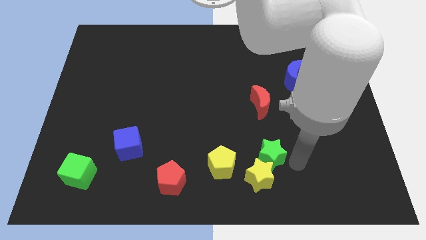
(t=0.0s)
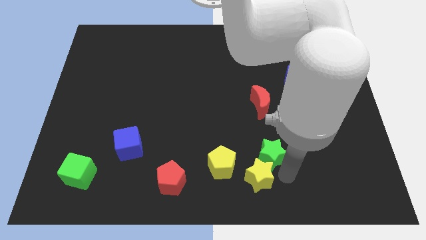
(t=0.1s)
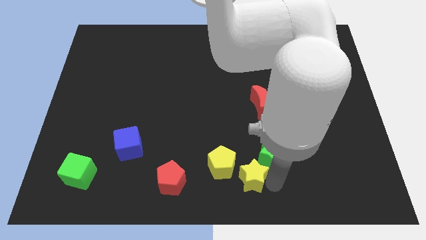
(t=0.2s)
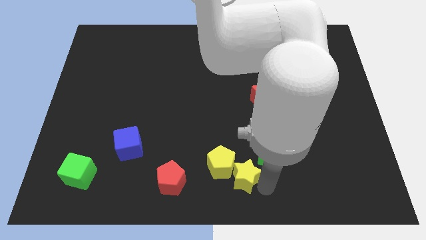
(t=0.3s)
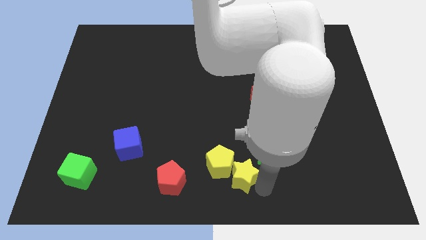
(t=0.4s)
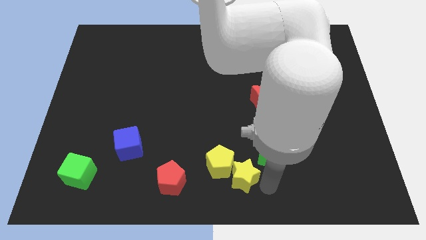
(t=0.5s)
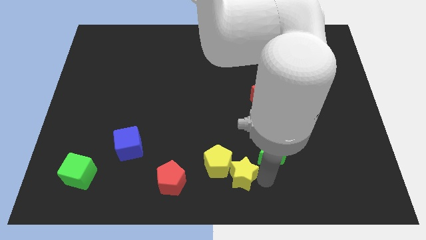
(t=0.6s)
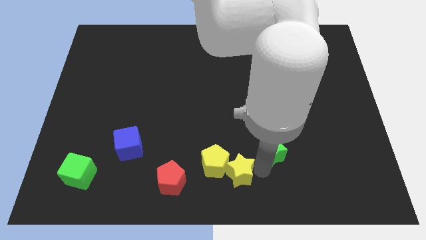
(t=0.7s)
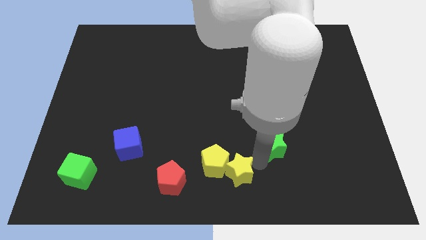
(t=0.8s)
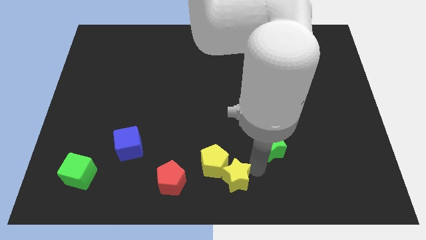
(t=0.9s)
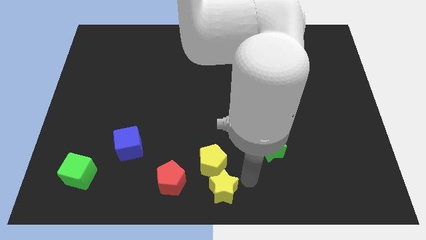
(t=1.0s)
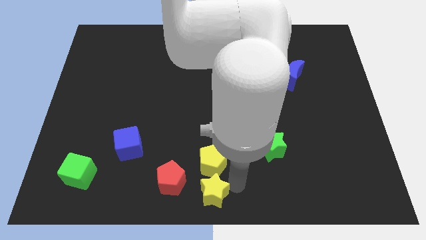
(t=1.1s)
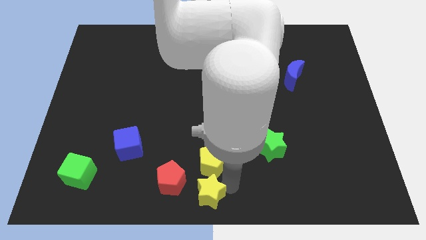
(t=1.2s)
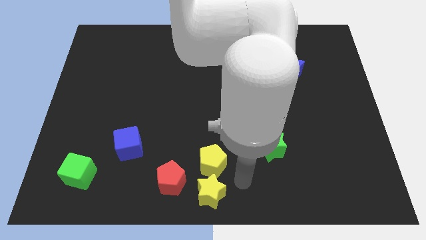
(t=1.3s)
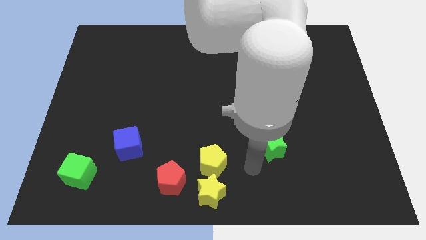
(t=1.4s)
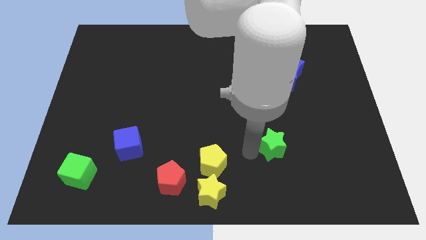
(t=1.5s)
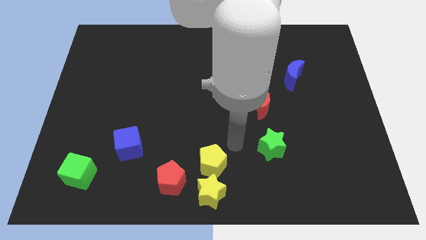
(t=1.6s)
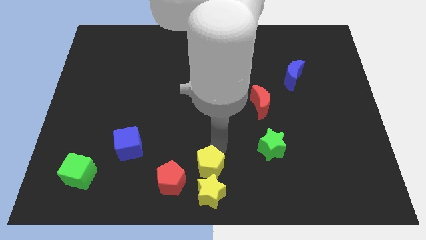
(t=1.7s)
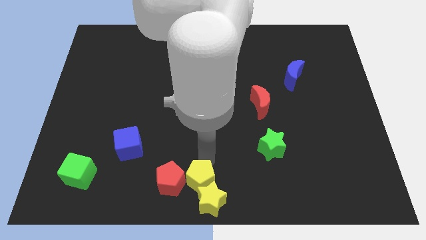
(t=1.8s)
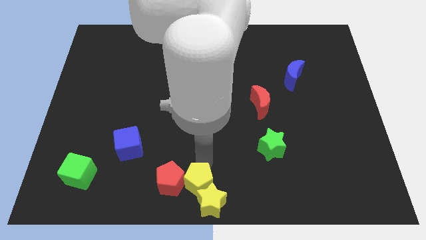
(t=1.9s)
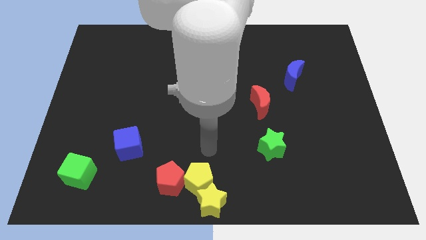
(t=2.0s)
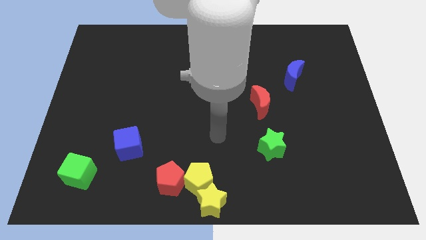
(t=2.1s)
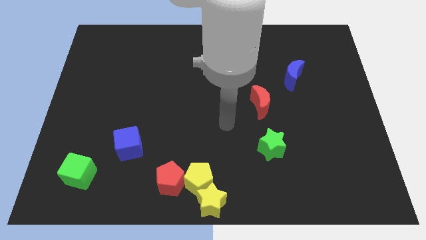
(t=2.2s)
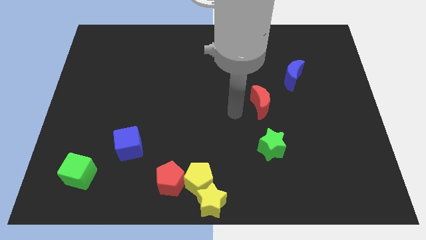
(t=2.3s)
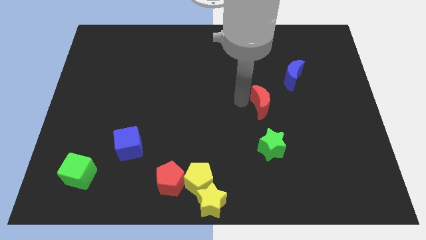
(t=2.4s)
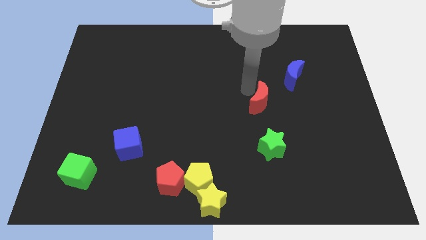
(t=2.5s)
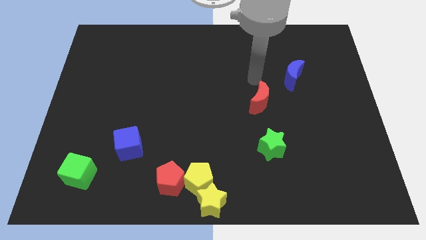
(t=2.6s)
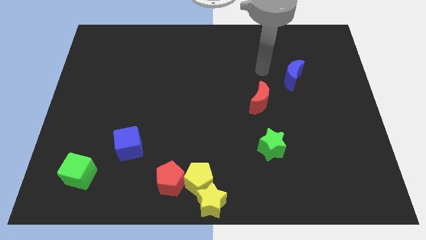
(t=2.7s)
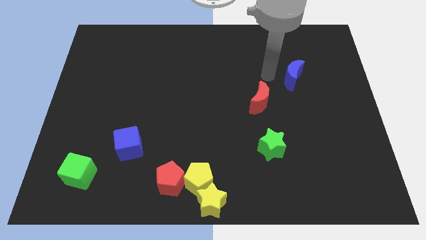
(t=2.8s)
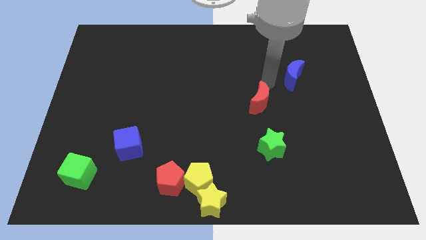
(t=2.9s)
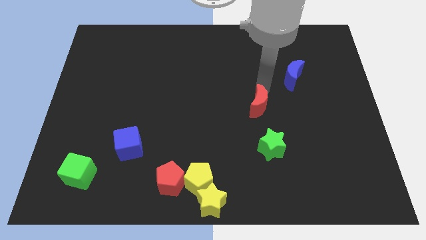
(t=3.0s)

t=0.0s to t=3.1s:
place both the yellow blocks at the bottom center of the board

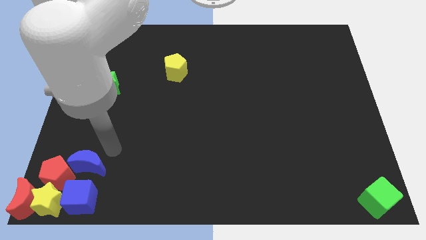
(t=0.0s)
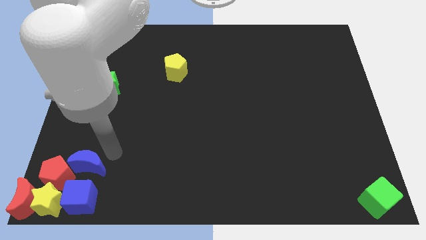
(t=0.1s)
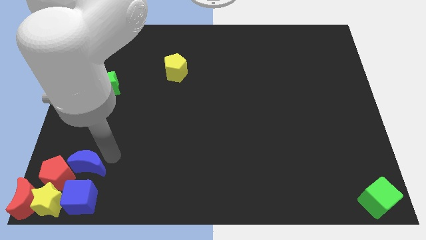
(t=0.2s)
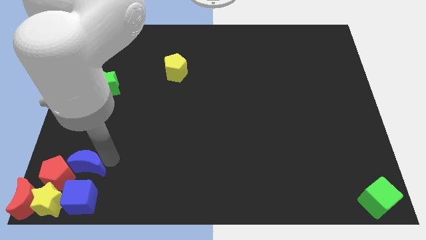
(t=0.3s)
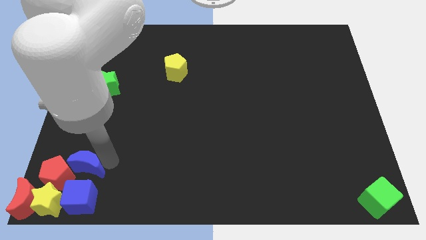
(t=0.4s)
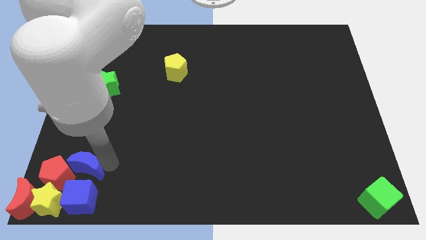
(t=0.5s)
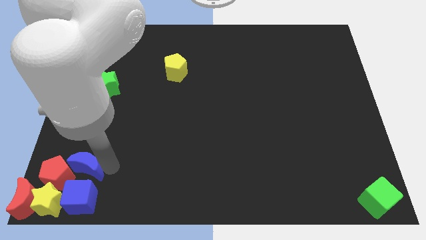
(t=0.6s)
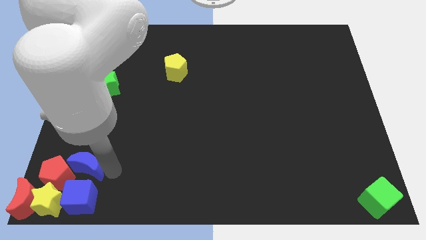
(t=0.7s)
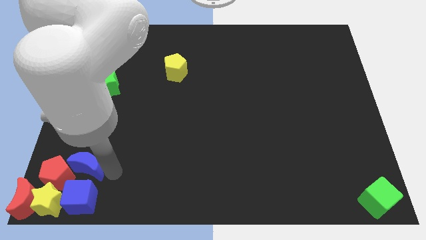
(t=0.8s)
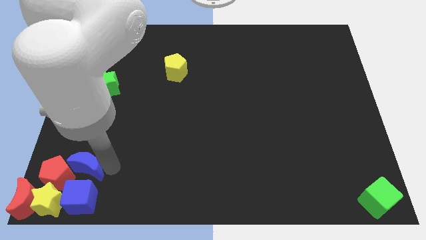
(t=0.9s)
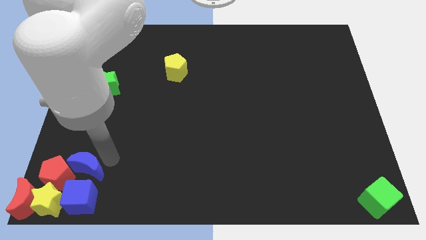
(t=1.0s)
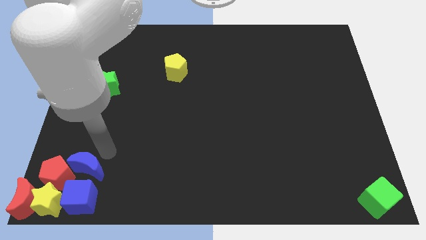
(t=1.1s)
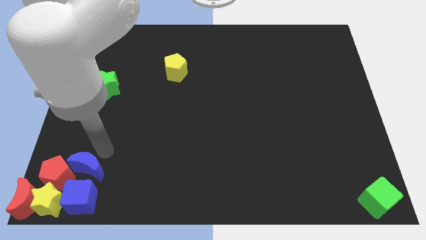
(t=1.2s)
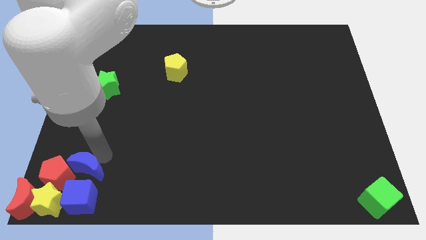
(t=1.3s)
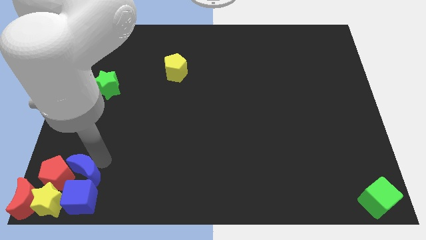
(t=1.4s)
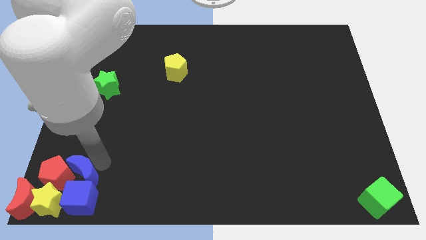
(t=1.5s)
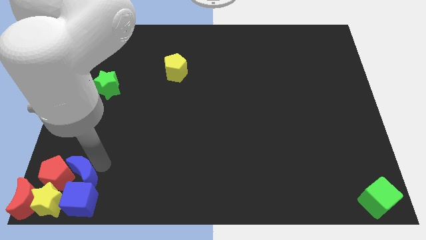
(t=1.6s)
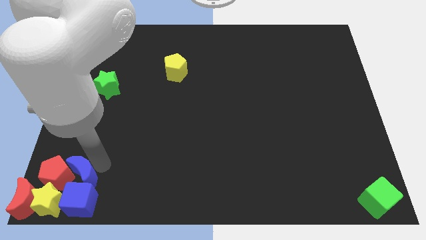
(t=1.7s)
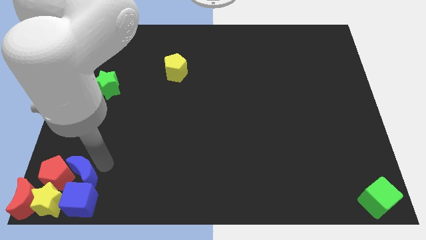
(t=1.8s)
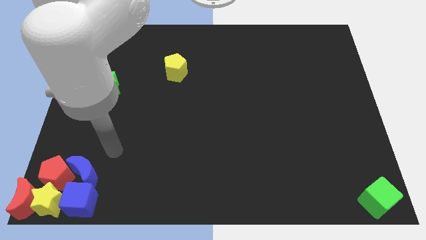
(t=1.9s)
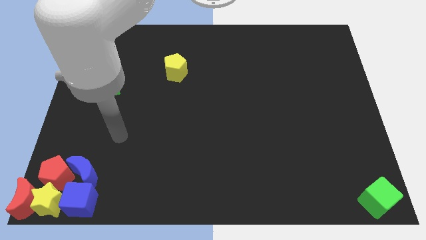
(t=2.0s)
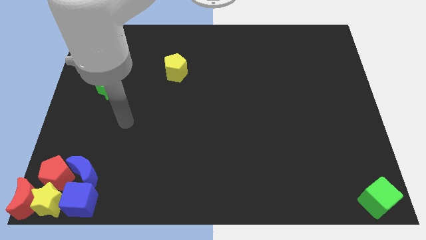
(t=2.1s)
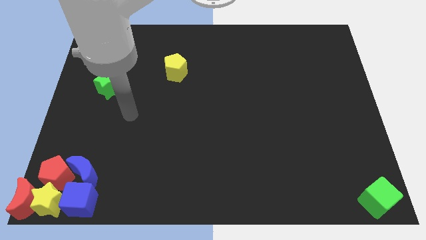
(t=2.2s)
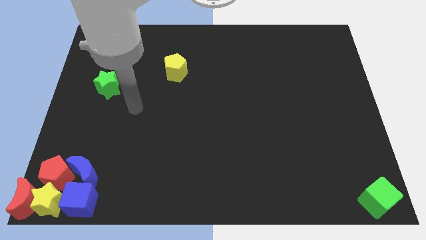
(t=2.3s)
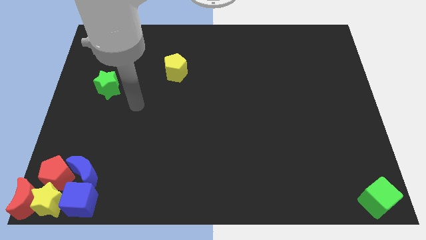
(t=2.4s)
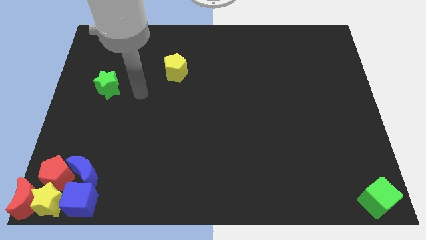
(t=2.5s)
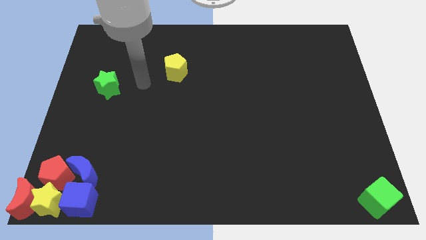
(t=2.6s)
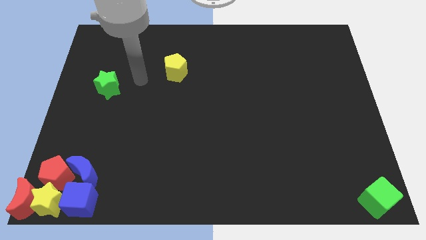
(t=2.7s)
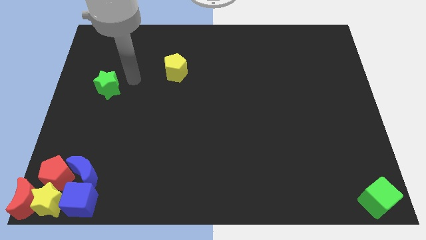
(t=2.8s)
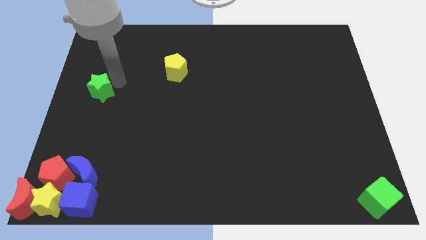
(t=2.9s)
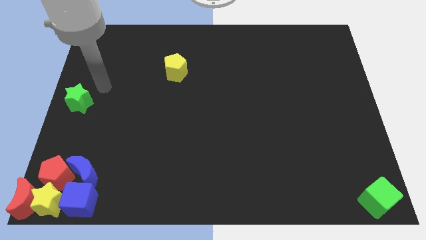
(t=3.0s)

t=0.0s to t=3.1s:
place the green star to the center left of the board

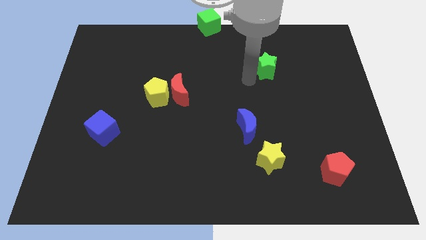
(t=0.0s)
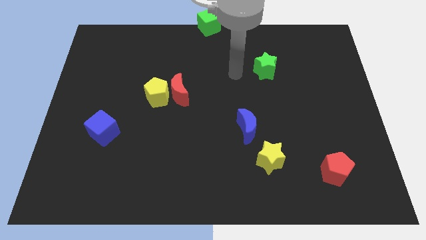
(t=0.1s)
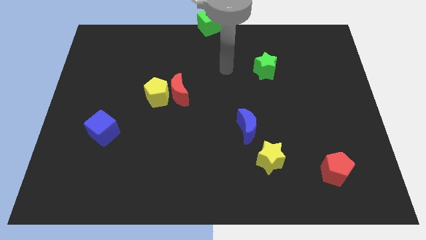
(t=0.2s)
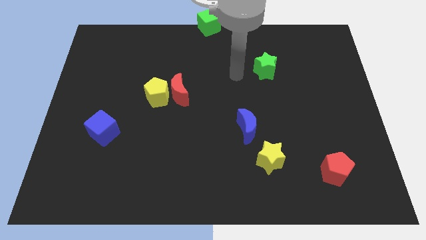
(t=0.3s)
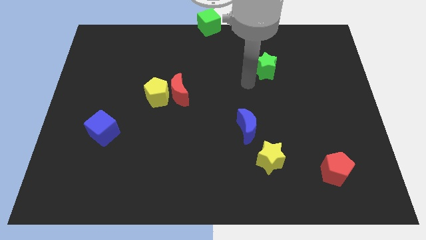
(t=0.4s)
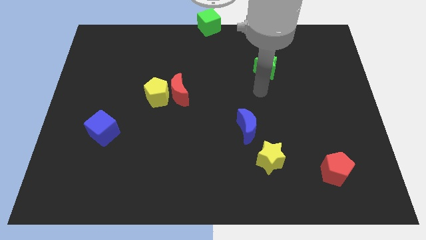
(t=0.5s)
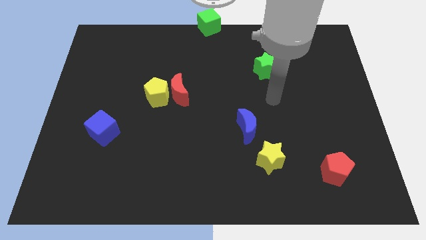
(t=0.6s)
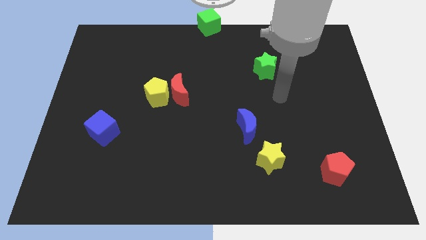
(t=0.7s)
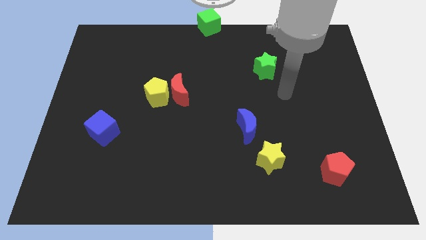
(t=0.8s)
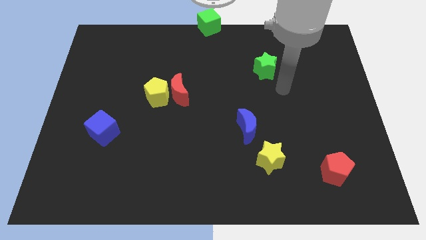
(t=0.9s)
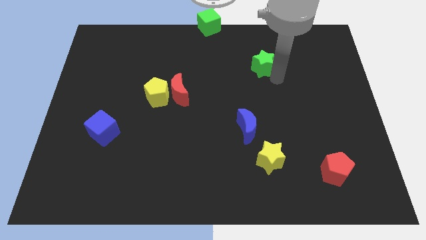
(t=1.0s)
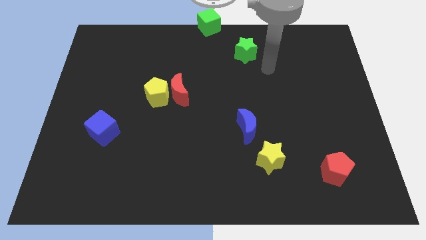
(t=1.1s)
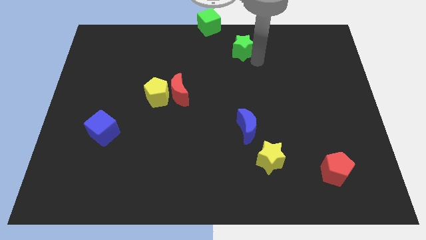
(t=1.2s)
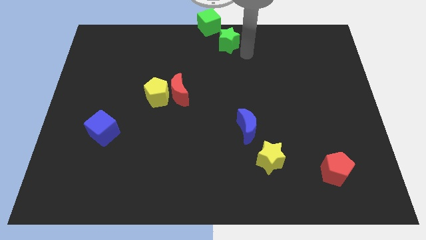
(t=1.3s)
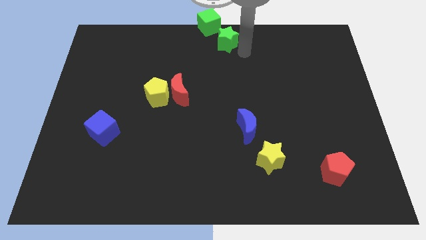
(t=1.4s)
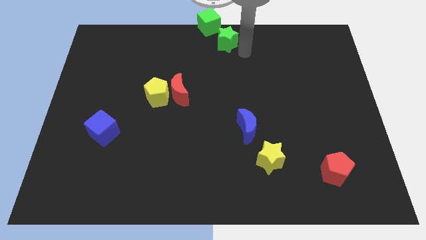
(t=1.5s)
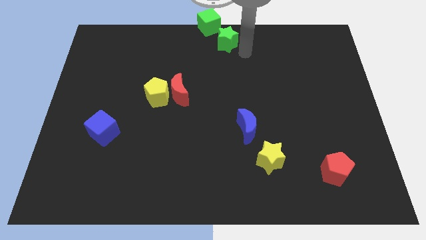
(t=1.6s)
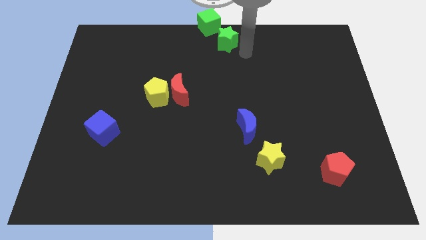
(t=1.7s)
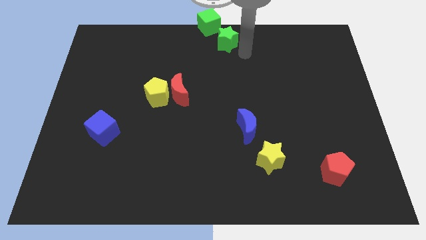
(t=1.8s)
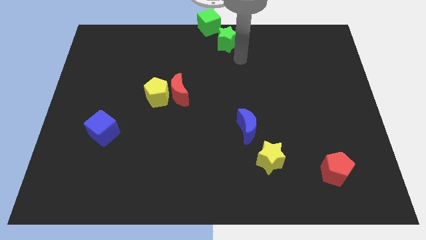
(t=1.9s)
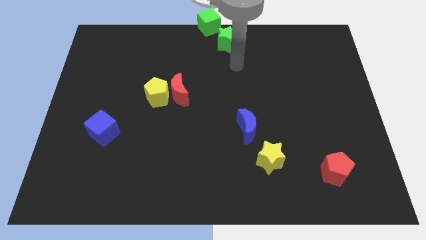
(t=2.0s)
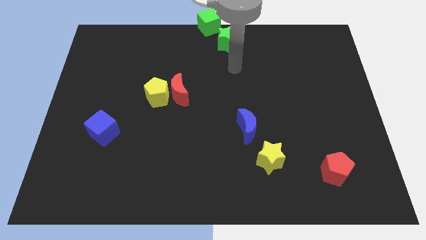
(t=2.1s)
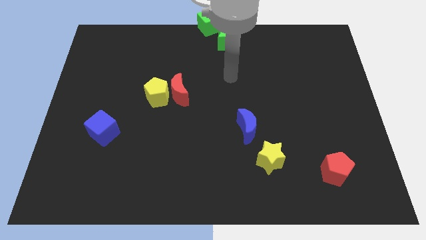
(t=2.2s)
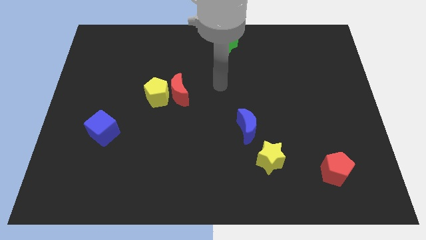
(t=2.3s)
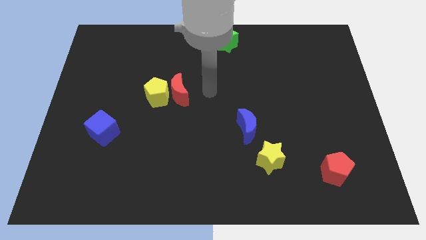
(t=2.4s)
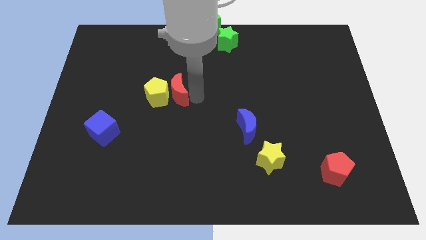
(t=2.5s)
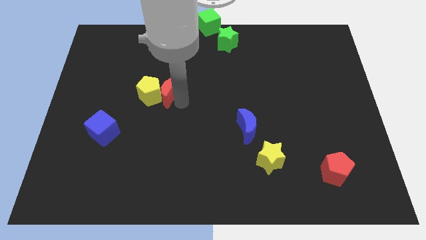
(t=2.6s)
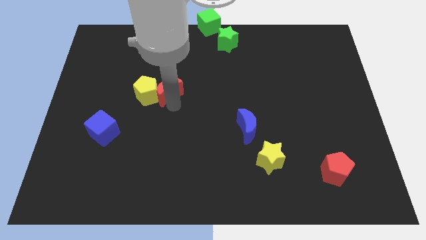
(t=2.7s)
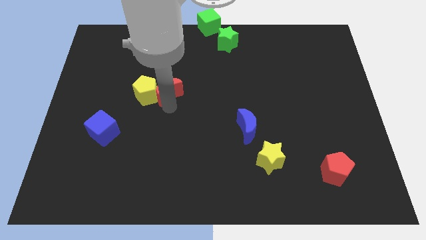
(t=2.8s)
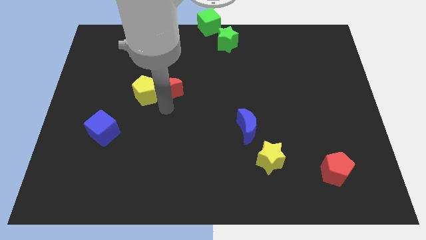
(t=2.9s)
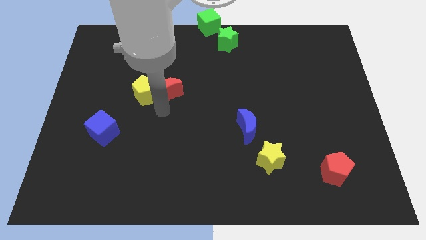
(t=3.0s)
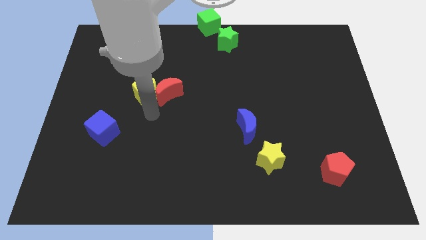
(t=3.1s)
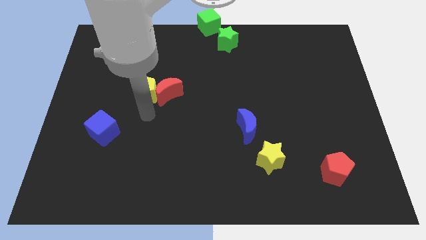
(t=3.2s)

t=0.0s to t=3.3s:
put the red moon and yellow pentagon together
